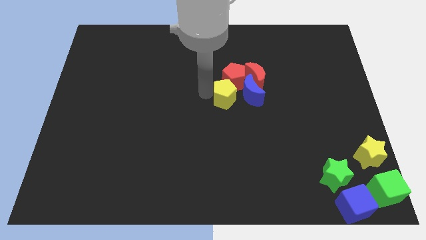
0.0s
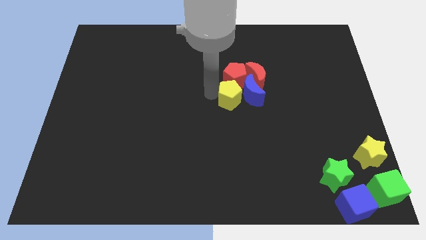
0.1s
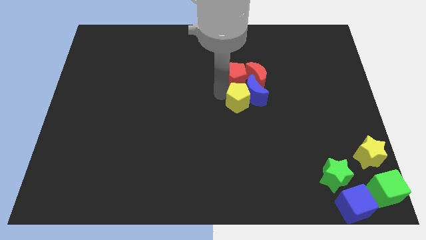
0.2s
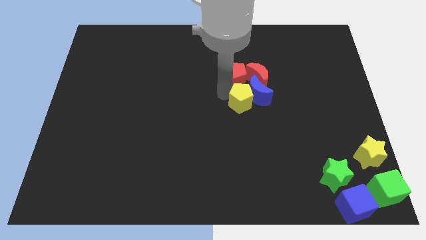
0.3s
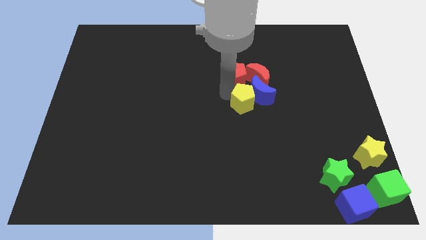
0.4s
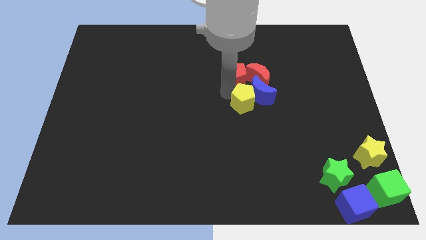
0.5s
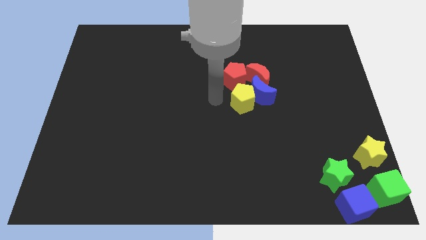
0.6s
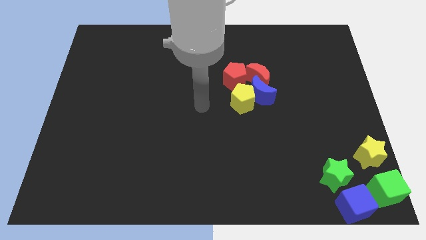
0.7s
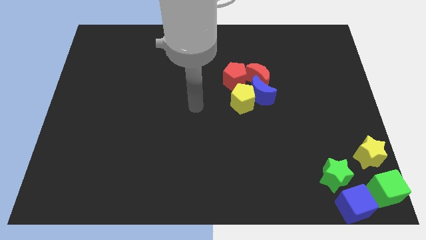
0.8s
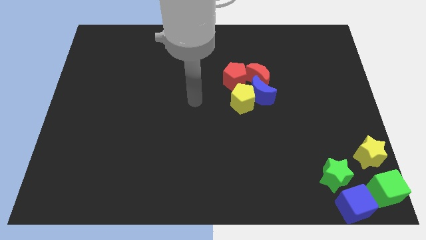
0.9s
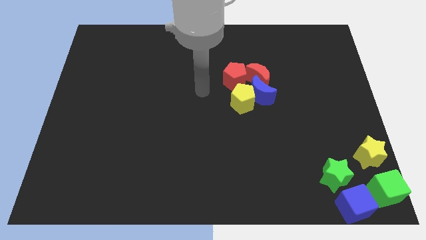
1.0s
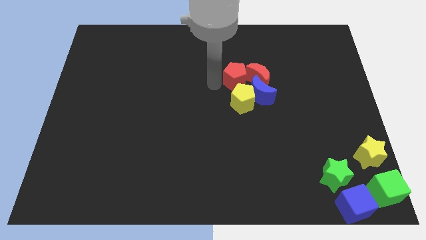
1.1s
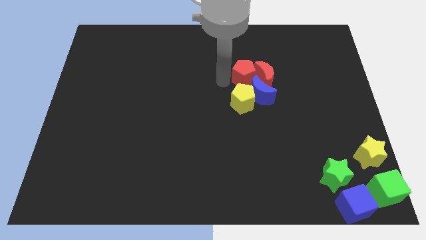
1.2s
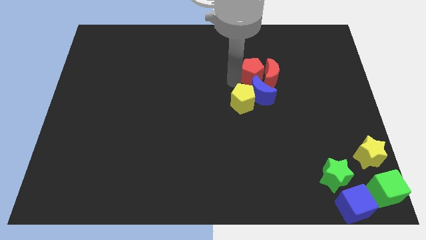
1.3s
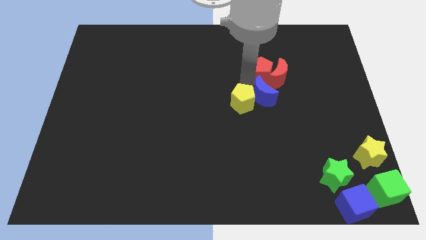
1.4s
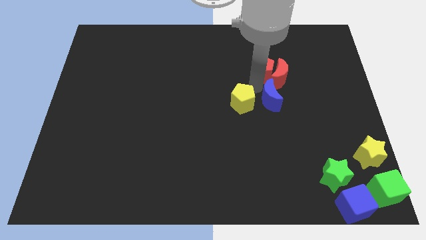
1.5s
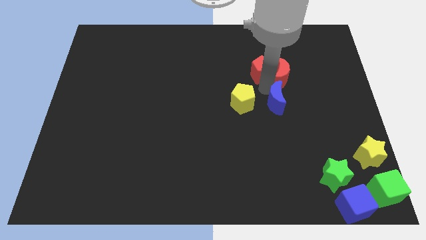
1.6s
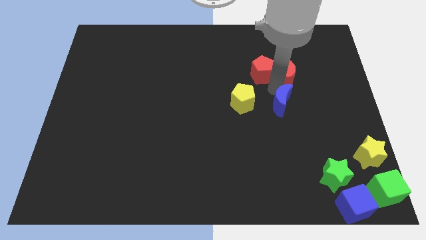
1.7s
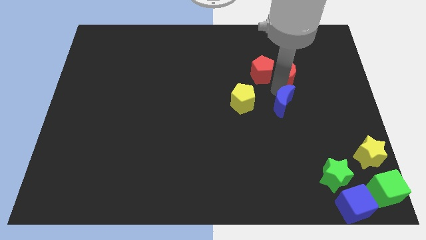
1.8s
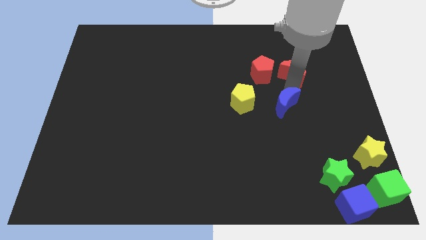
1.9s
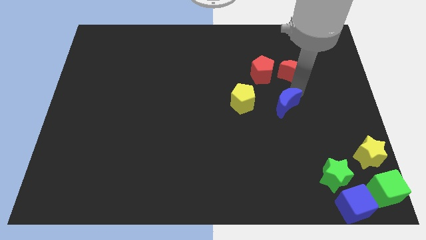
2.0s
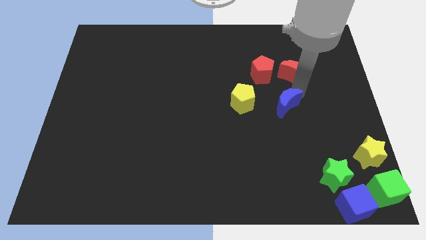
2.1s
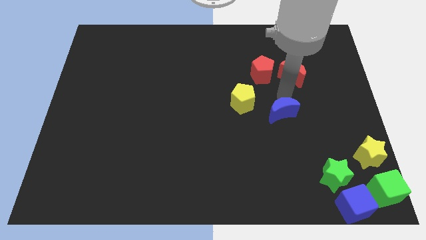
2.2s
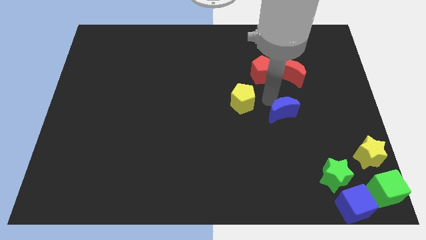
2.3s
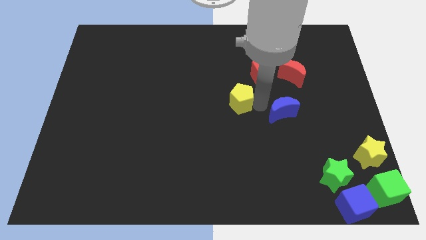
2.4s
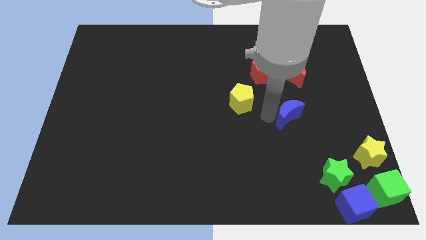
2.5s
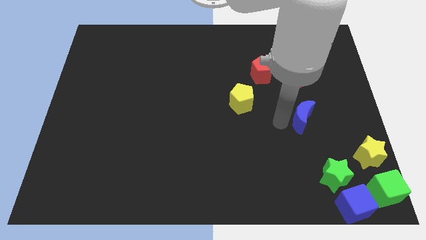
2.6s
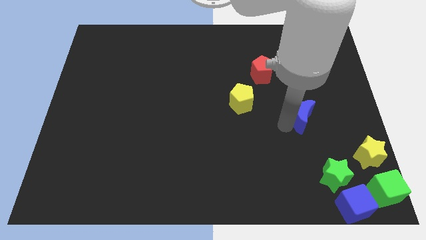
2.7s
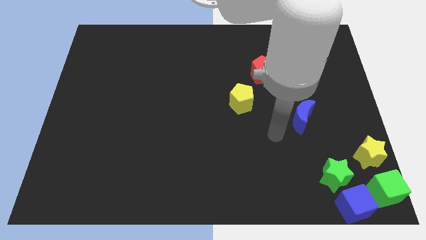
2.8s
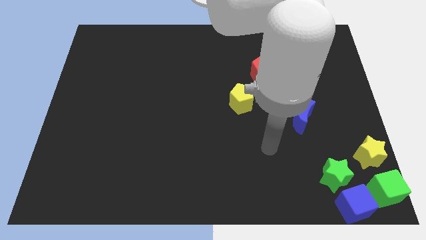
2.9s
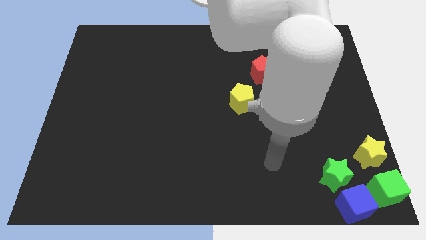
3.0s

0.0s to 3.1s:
separate the blue moon from the red crescent and yellow pentagon

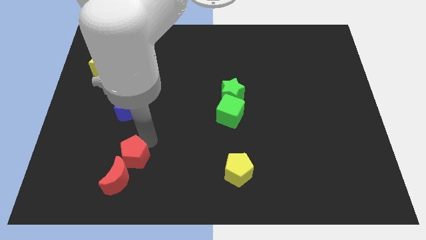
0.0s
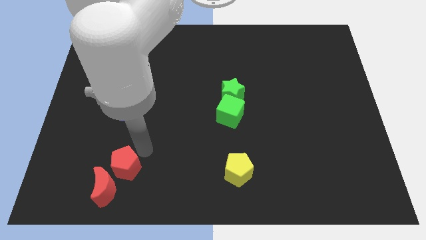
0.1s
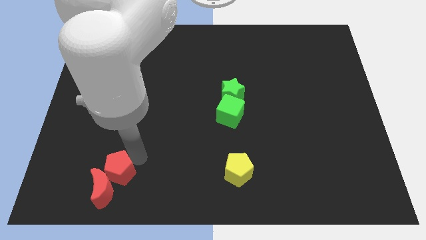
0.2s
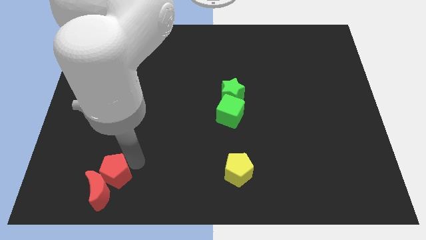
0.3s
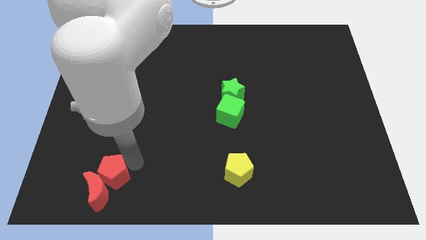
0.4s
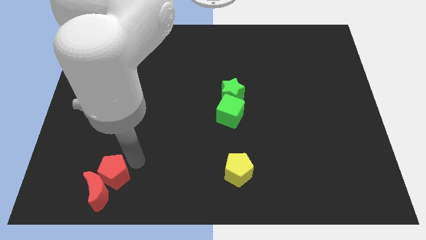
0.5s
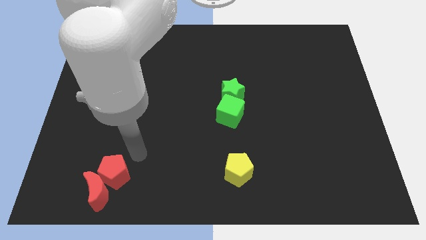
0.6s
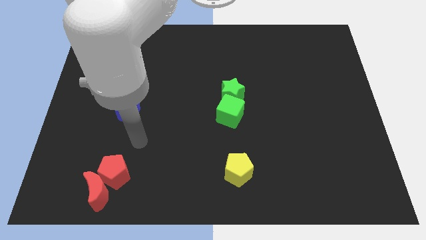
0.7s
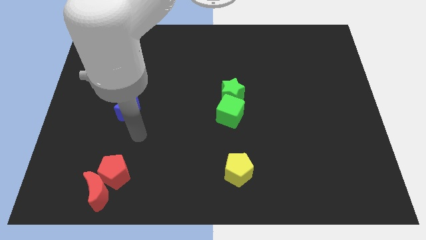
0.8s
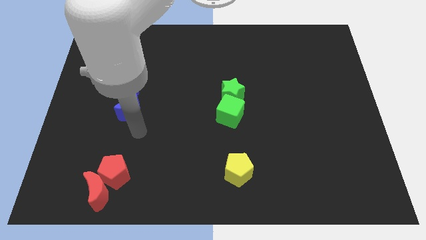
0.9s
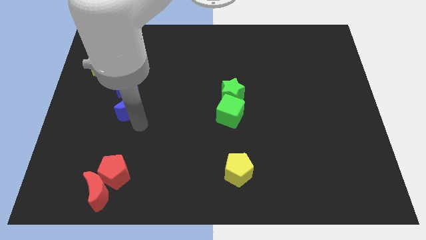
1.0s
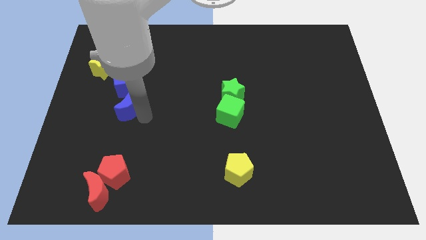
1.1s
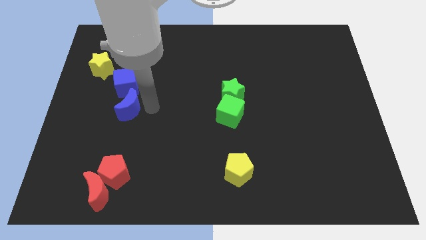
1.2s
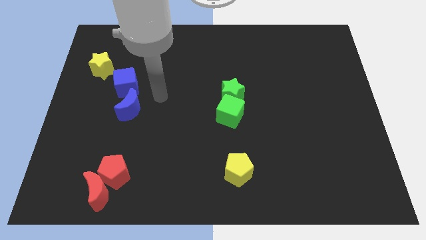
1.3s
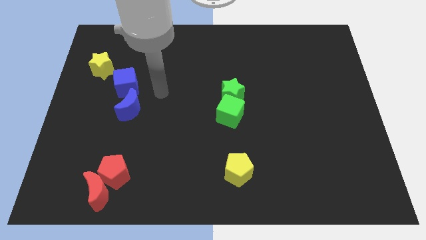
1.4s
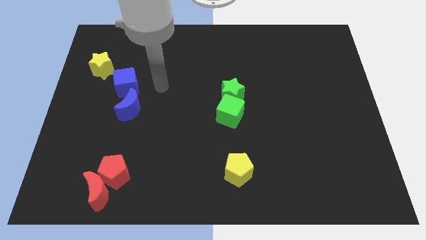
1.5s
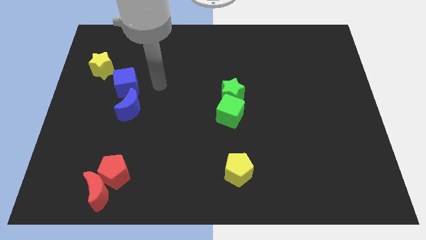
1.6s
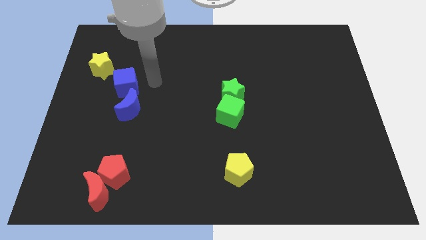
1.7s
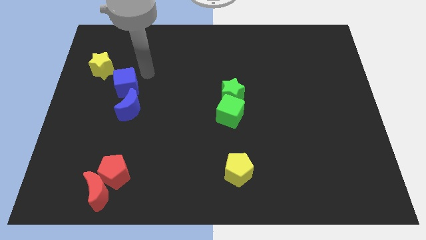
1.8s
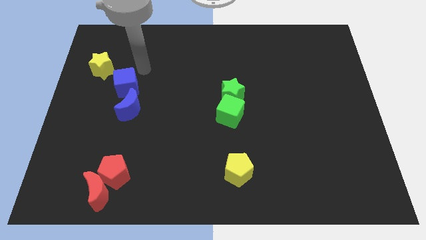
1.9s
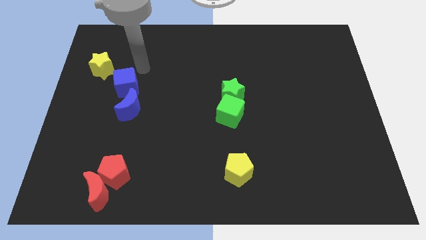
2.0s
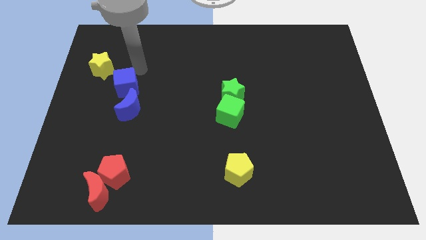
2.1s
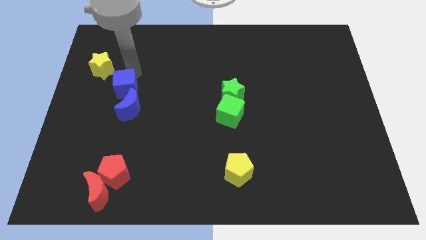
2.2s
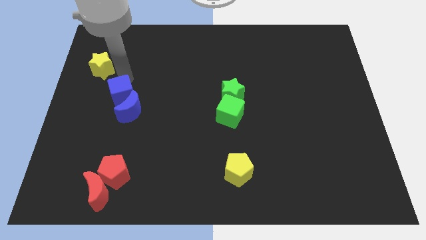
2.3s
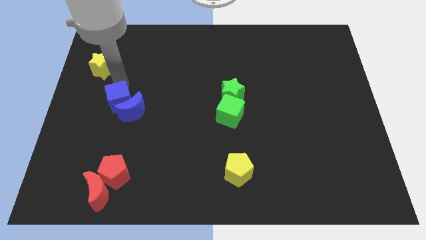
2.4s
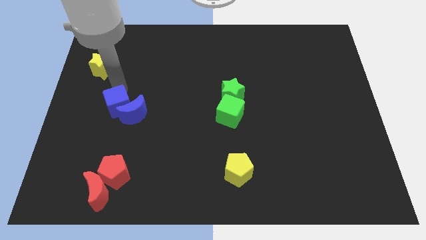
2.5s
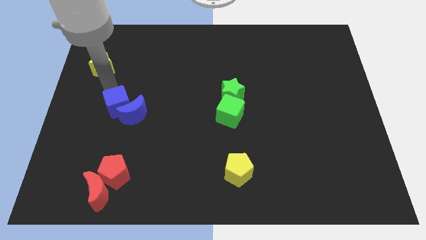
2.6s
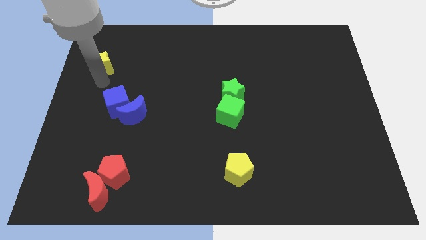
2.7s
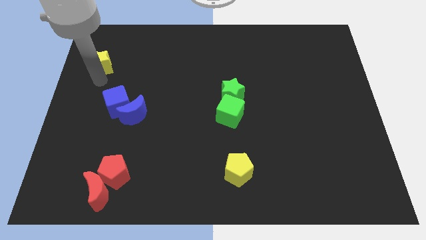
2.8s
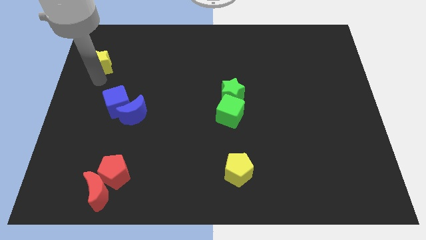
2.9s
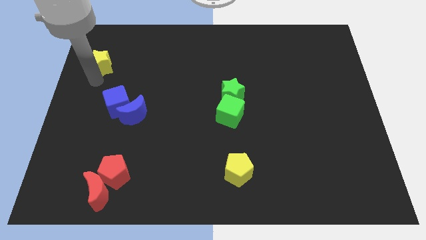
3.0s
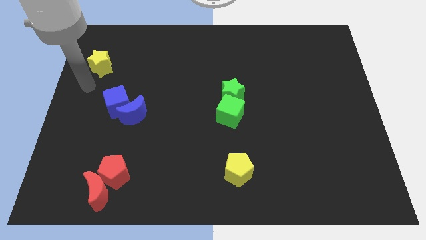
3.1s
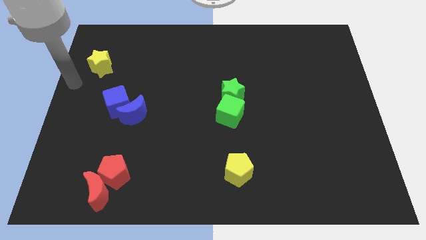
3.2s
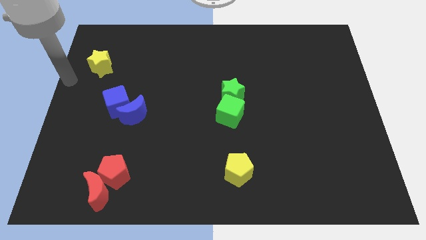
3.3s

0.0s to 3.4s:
move blue blocks into each other

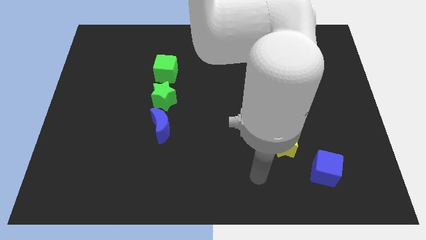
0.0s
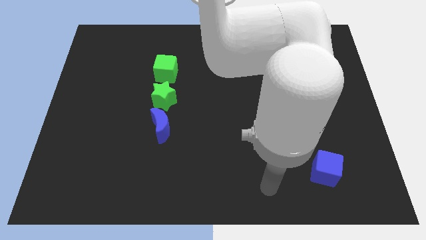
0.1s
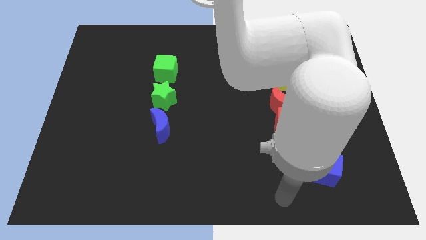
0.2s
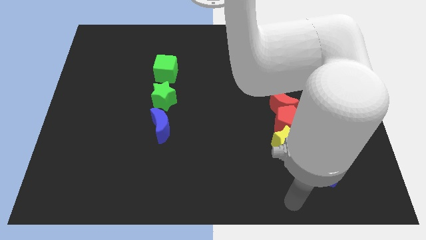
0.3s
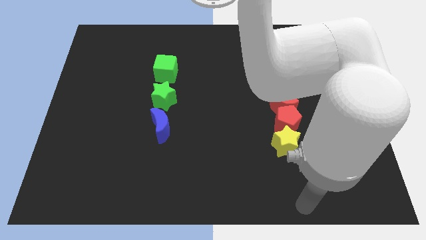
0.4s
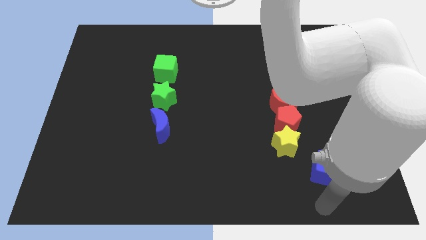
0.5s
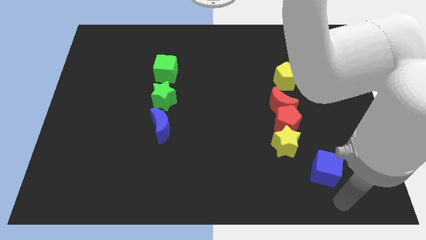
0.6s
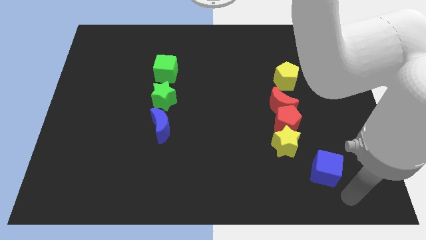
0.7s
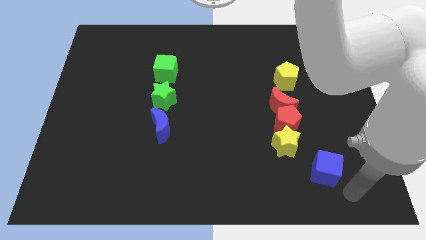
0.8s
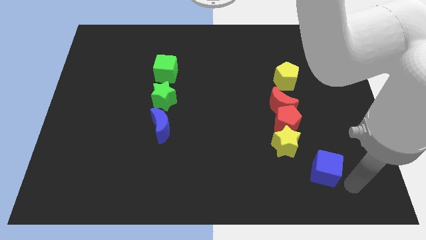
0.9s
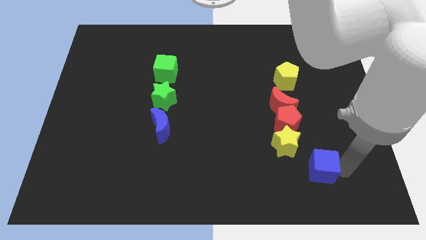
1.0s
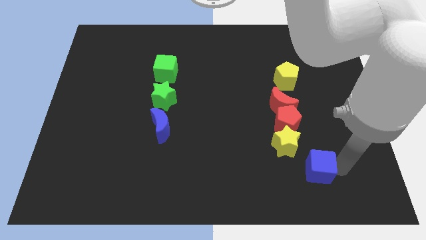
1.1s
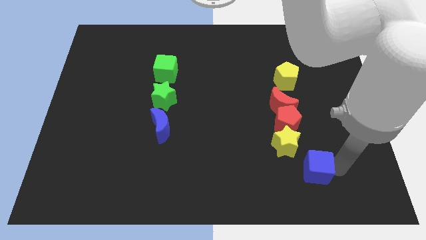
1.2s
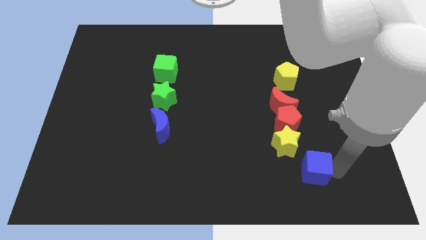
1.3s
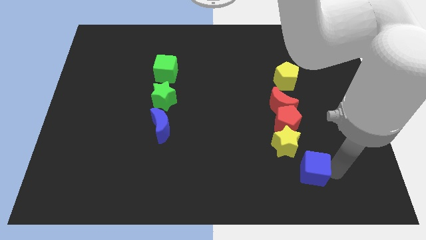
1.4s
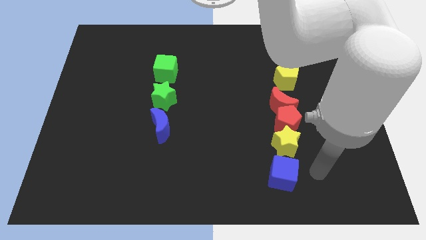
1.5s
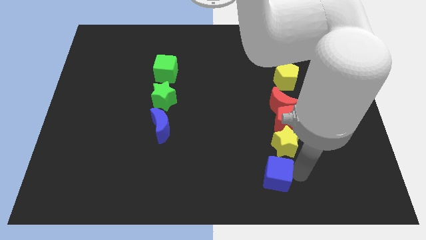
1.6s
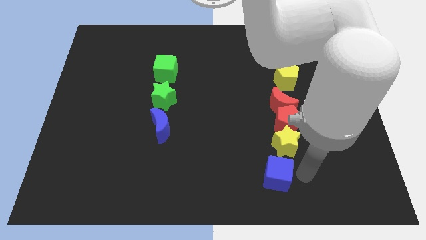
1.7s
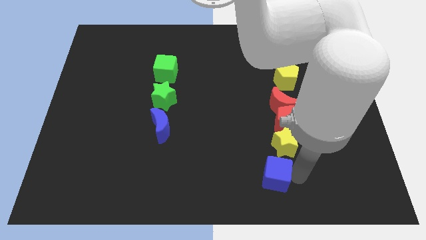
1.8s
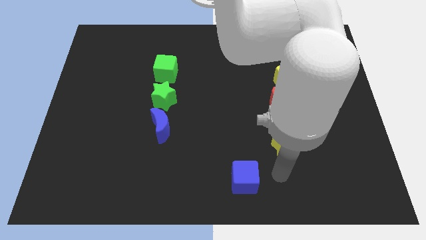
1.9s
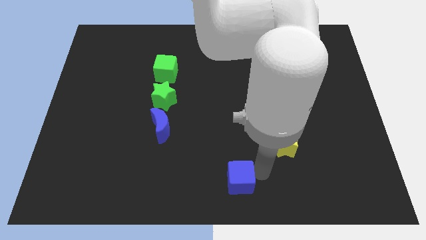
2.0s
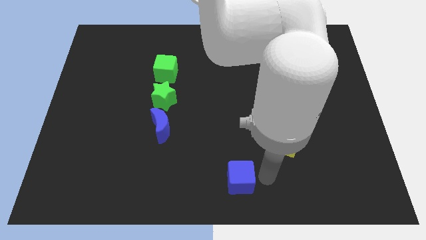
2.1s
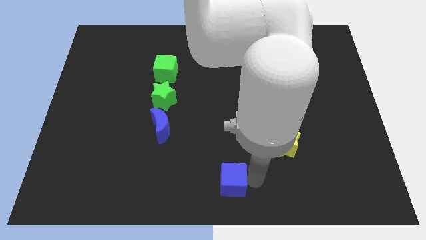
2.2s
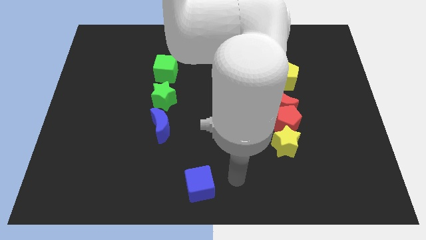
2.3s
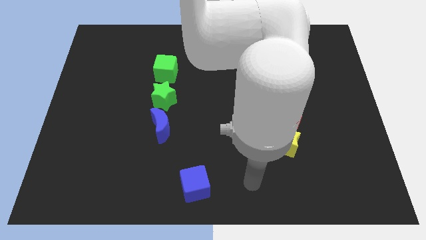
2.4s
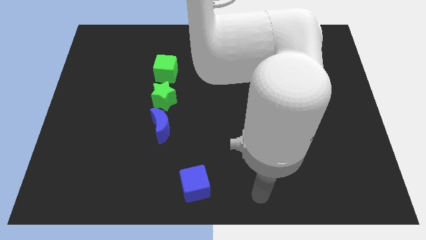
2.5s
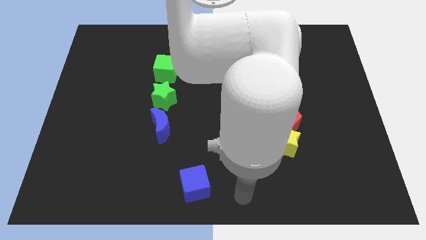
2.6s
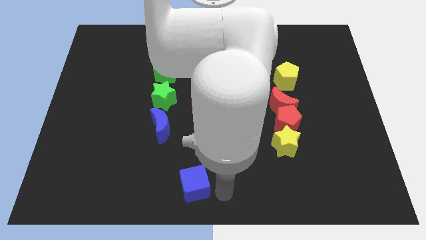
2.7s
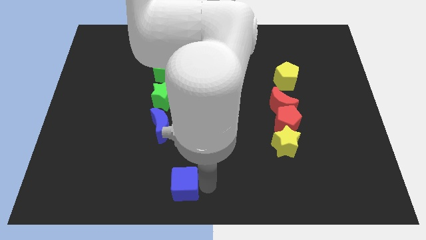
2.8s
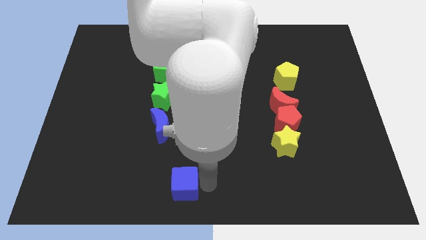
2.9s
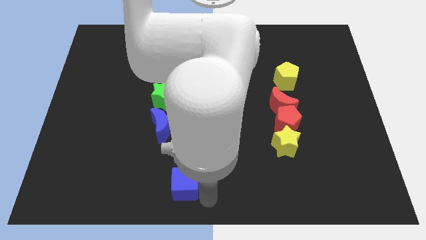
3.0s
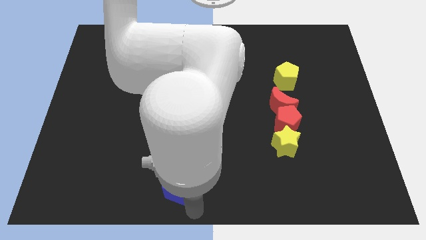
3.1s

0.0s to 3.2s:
move blue cube towards the left of board
